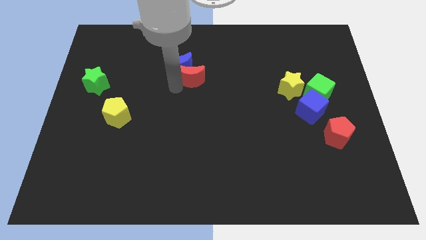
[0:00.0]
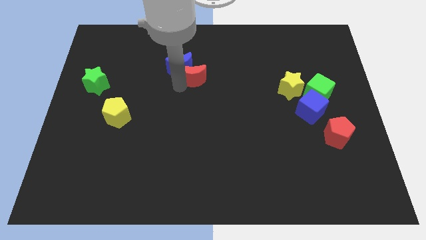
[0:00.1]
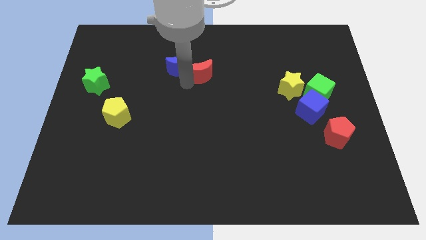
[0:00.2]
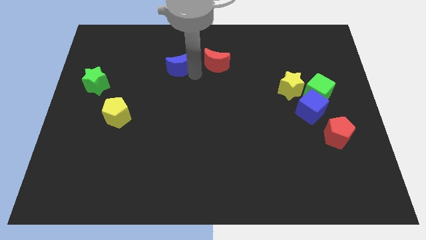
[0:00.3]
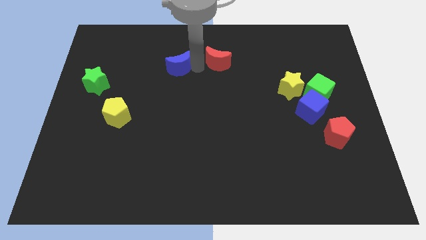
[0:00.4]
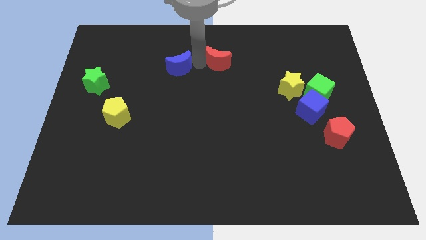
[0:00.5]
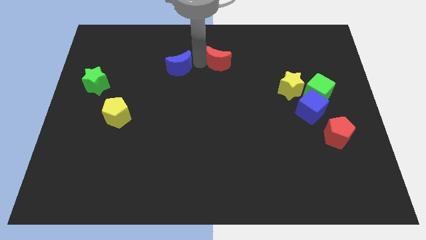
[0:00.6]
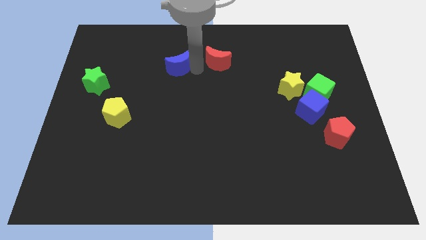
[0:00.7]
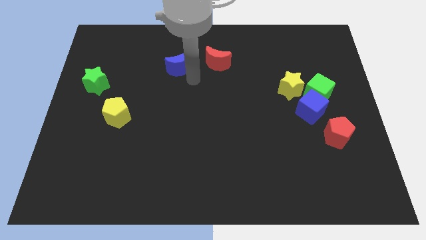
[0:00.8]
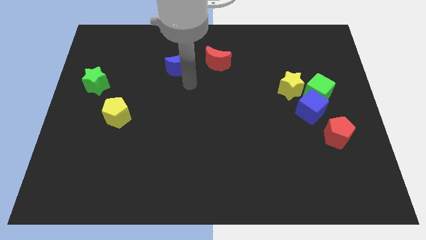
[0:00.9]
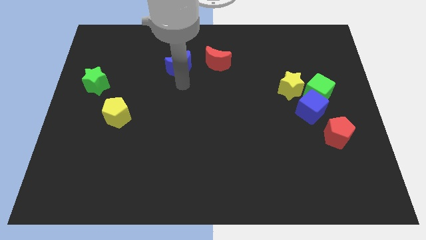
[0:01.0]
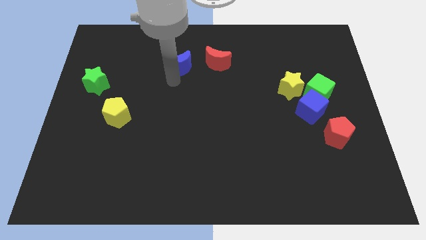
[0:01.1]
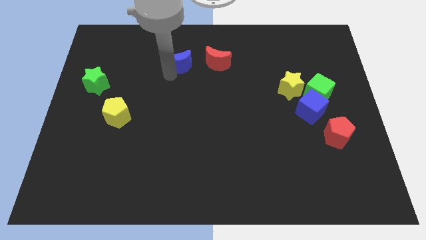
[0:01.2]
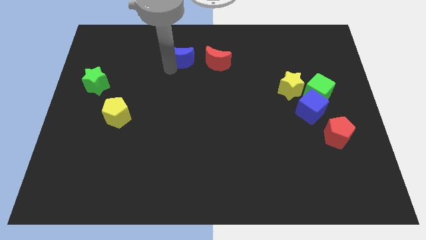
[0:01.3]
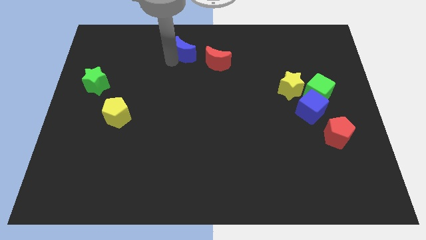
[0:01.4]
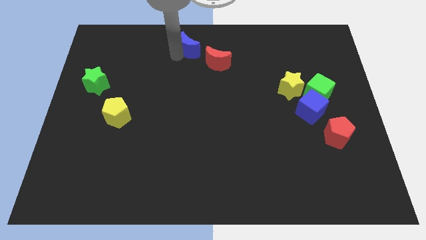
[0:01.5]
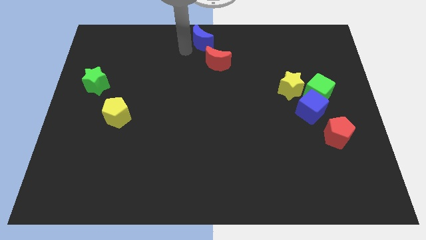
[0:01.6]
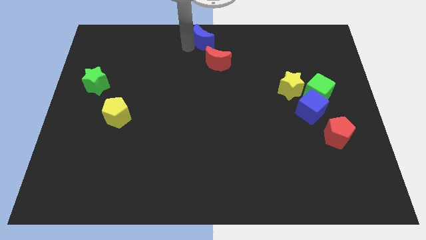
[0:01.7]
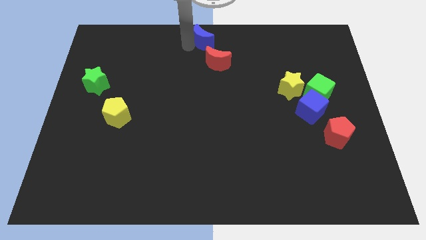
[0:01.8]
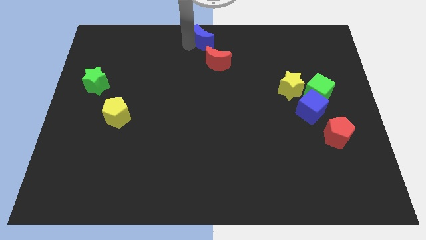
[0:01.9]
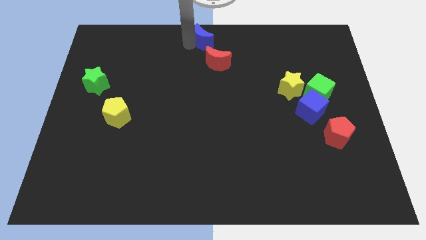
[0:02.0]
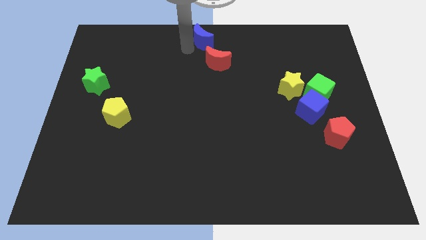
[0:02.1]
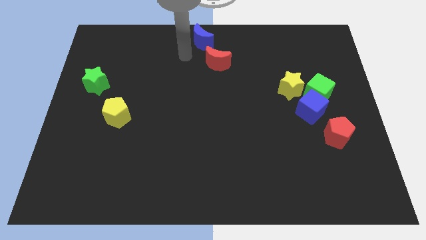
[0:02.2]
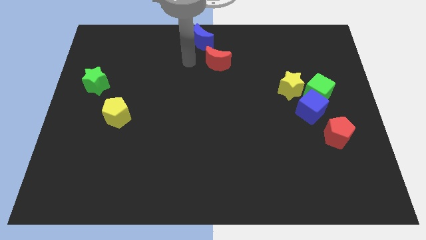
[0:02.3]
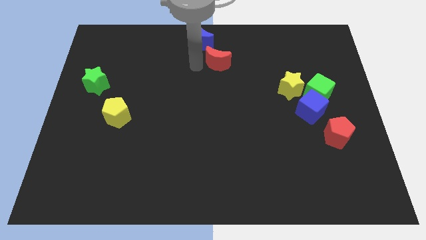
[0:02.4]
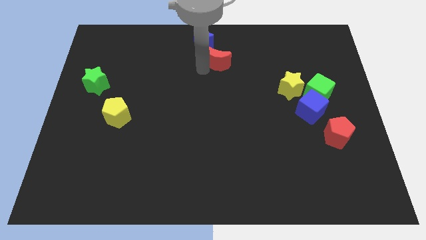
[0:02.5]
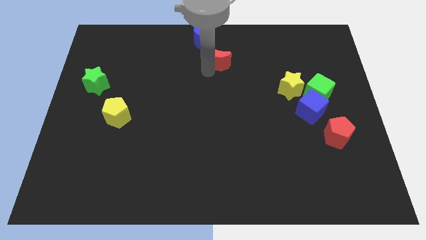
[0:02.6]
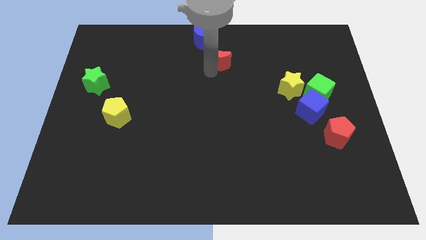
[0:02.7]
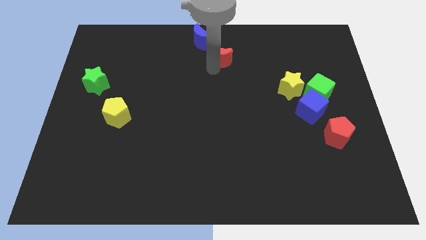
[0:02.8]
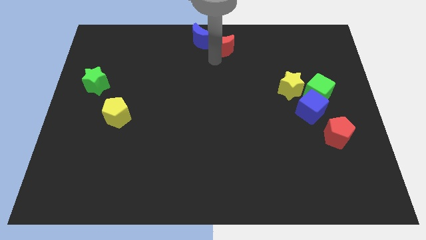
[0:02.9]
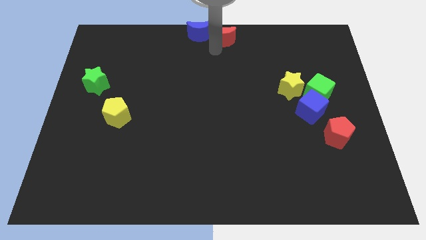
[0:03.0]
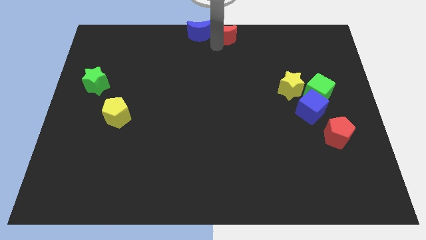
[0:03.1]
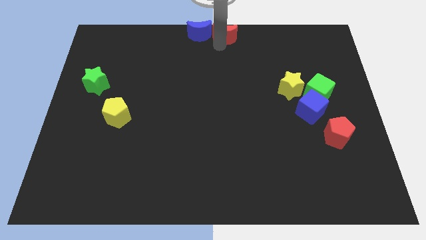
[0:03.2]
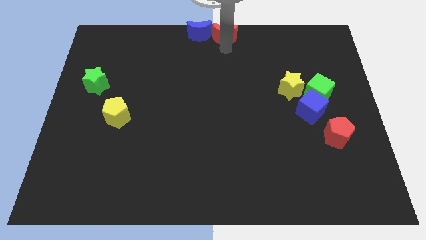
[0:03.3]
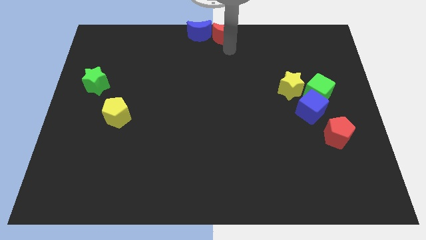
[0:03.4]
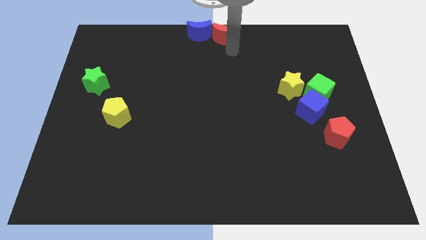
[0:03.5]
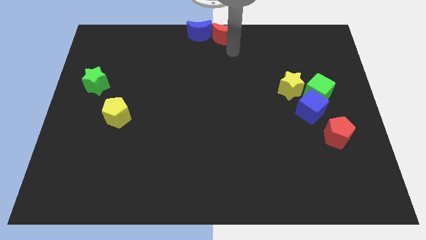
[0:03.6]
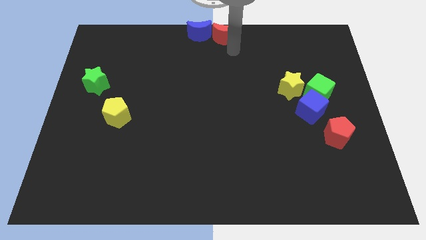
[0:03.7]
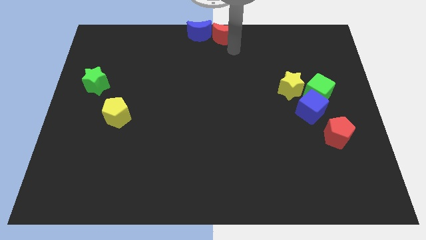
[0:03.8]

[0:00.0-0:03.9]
move red moon and blue moon to the top center of the board

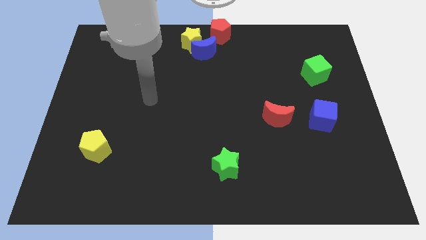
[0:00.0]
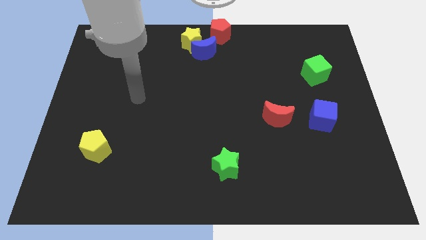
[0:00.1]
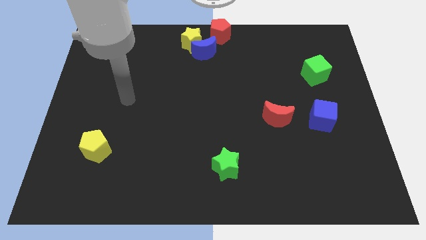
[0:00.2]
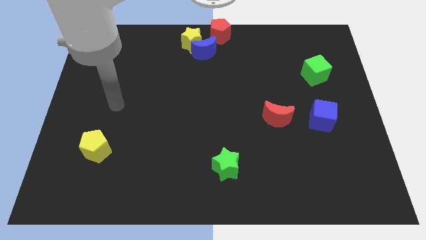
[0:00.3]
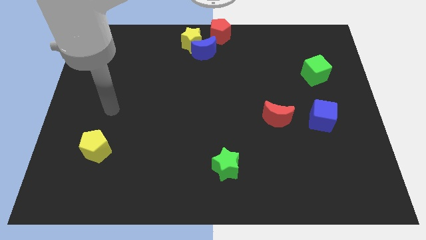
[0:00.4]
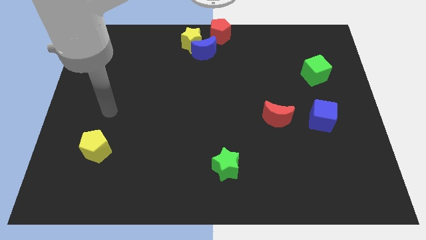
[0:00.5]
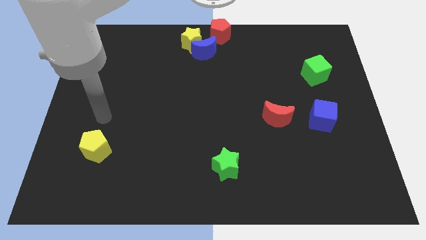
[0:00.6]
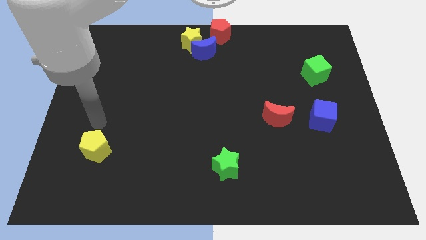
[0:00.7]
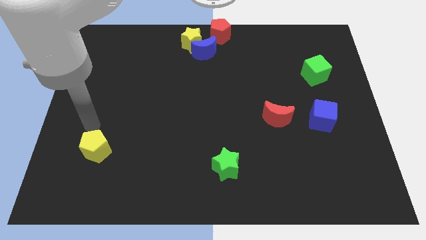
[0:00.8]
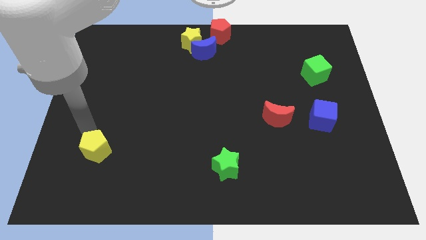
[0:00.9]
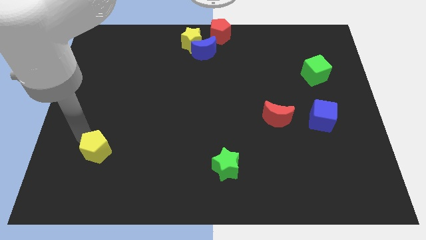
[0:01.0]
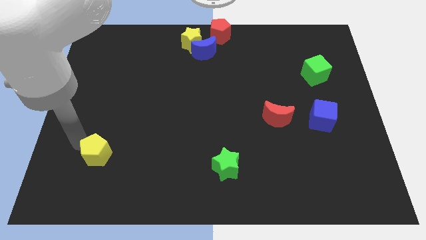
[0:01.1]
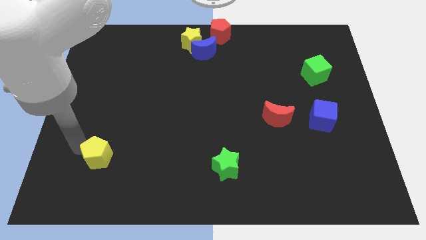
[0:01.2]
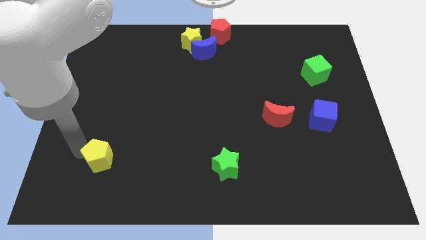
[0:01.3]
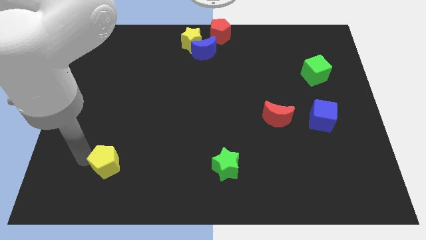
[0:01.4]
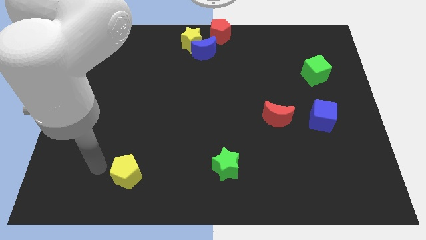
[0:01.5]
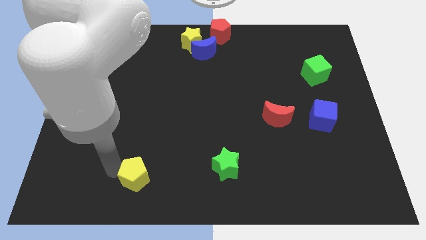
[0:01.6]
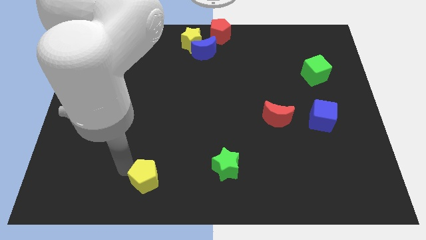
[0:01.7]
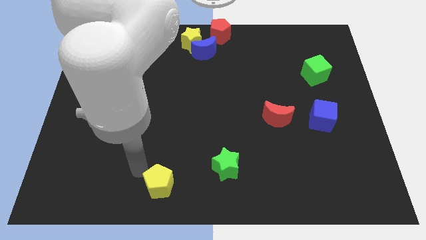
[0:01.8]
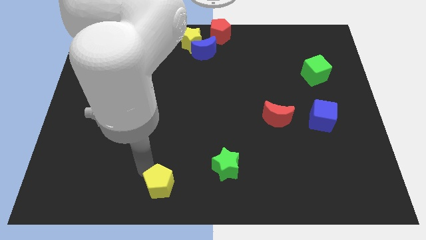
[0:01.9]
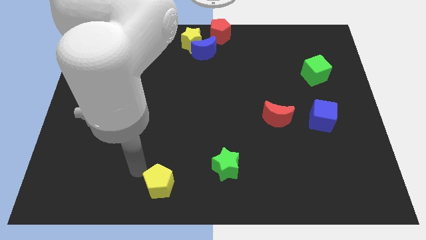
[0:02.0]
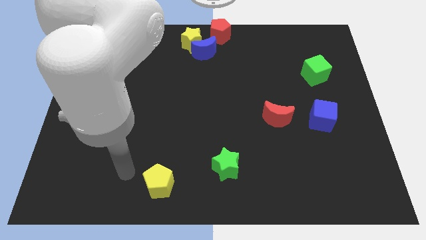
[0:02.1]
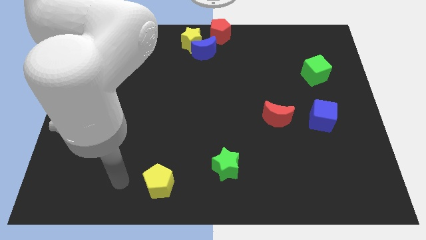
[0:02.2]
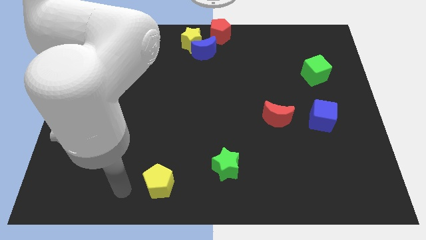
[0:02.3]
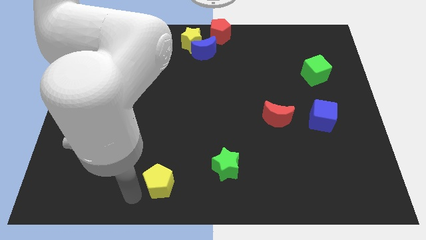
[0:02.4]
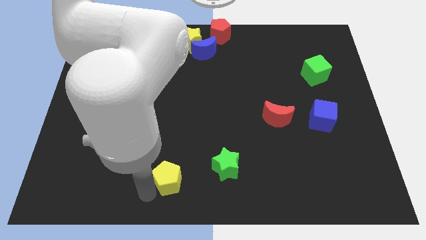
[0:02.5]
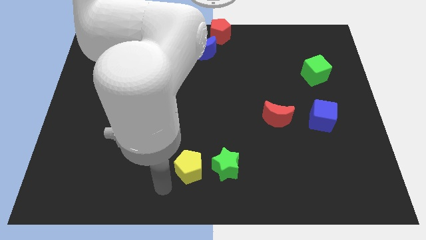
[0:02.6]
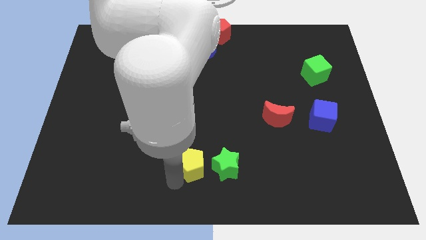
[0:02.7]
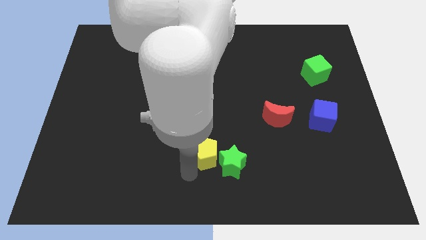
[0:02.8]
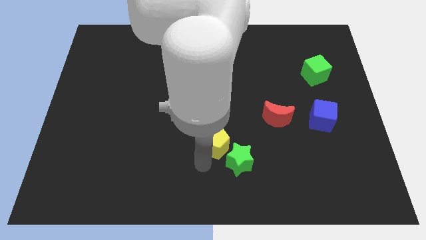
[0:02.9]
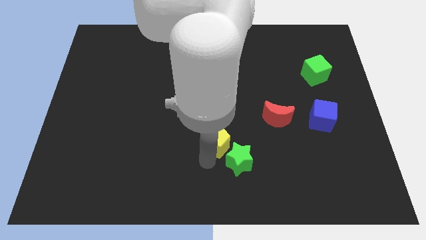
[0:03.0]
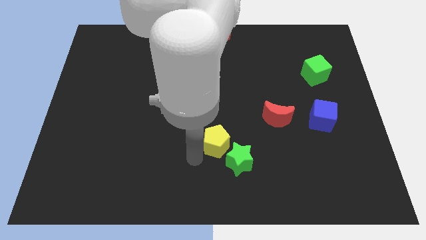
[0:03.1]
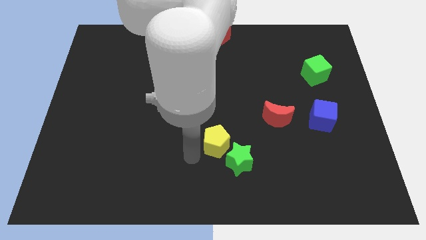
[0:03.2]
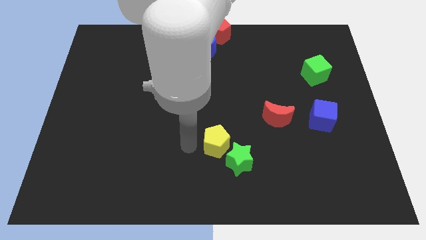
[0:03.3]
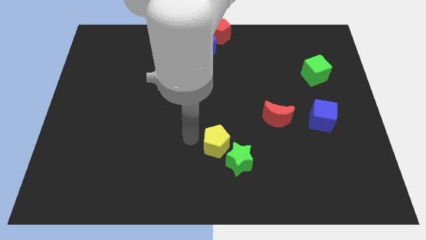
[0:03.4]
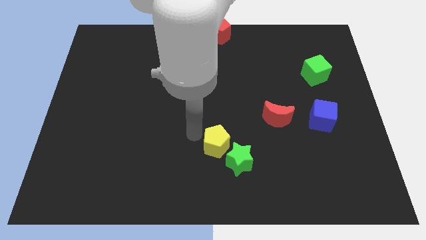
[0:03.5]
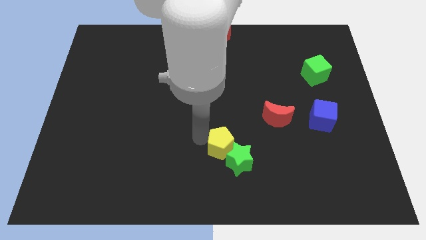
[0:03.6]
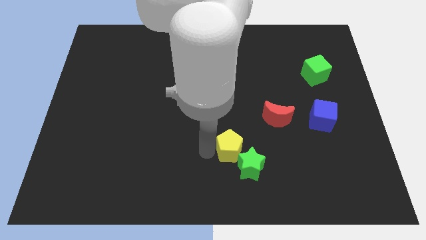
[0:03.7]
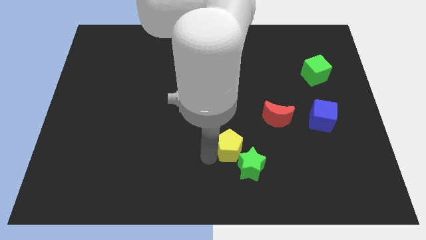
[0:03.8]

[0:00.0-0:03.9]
push the yellow pentagon into the green star

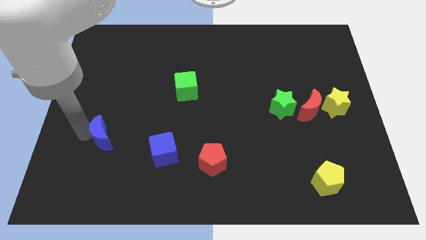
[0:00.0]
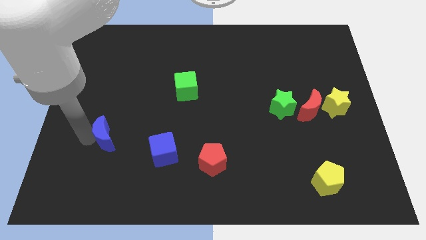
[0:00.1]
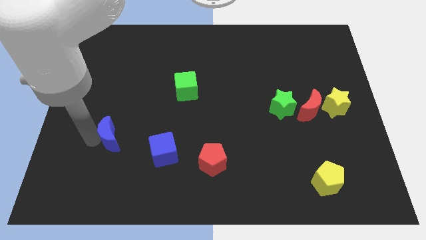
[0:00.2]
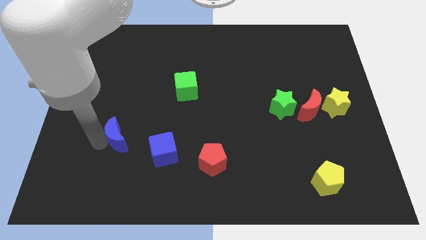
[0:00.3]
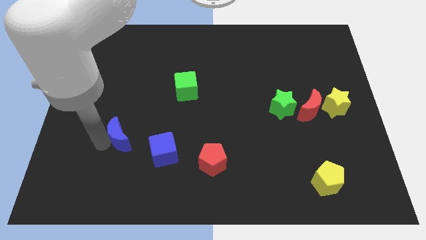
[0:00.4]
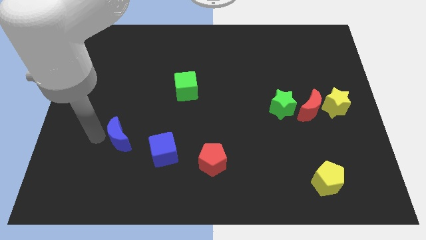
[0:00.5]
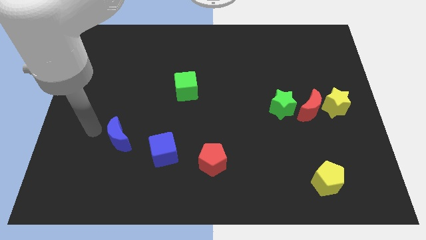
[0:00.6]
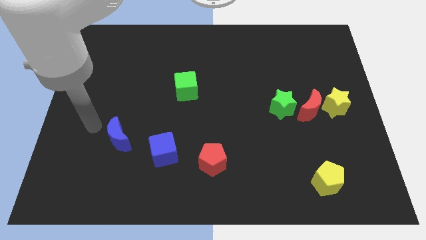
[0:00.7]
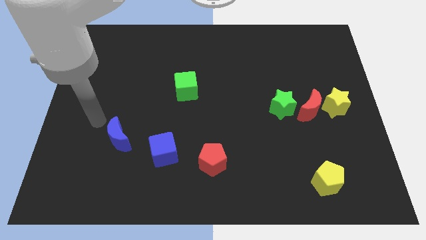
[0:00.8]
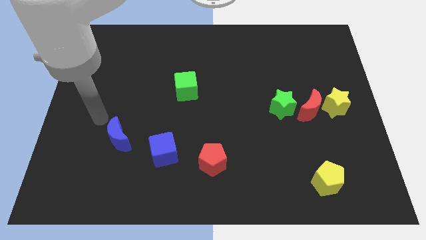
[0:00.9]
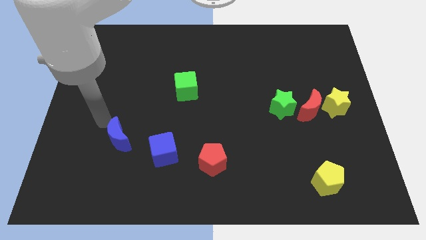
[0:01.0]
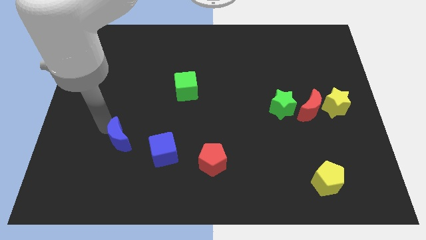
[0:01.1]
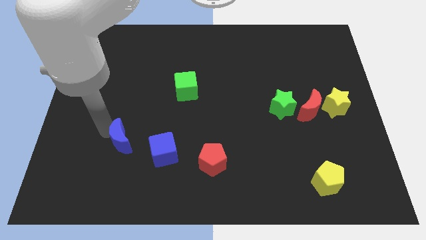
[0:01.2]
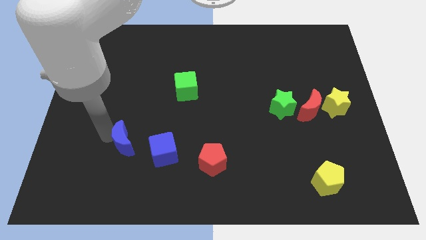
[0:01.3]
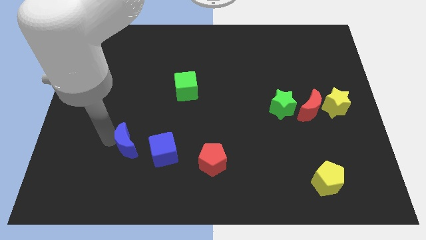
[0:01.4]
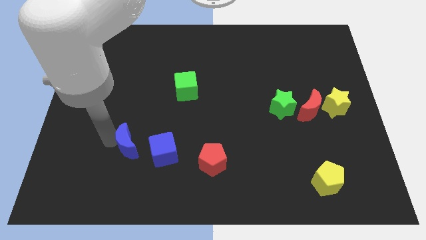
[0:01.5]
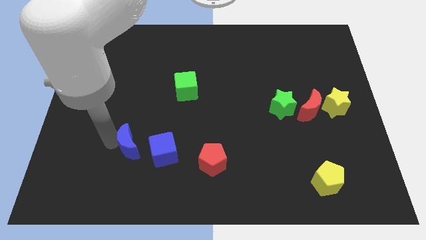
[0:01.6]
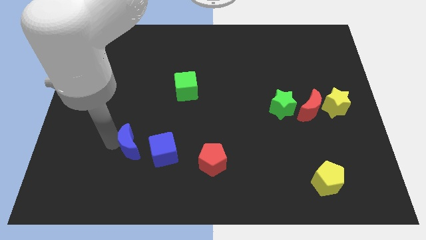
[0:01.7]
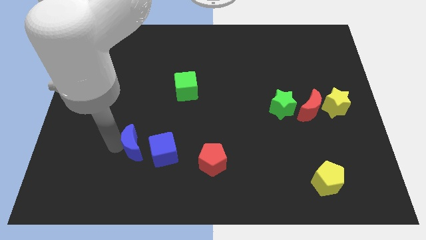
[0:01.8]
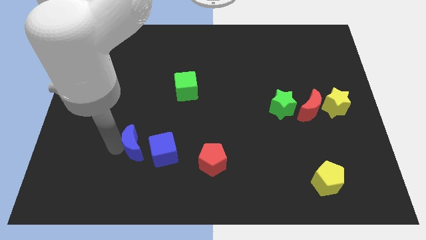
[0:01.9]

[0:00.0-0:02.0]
move the blue crescent close to the blue cube
